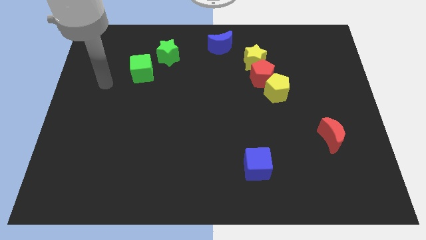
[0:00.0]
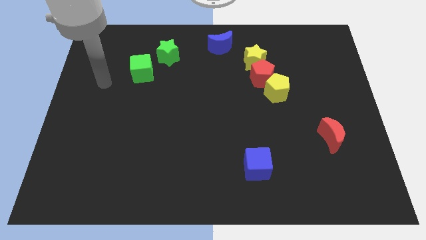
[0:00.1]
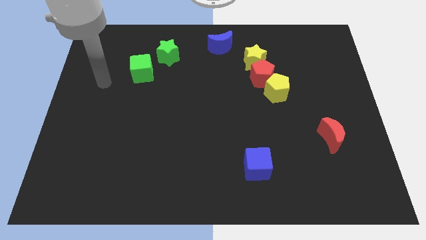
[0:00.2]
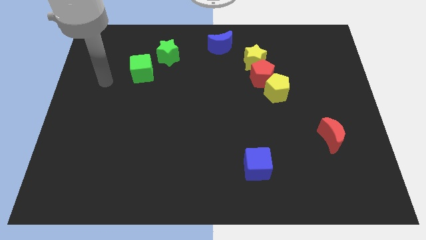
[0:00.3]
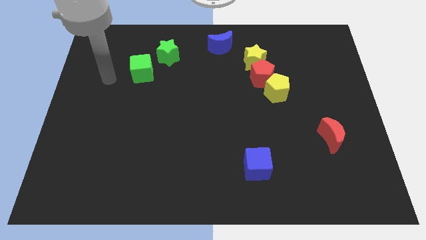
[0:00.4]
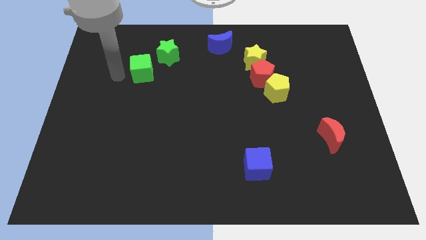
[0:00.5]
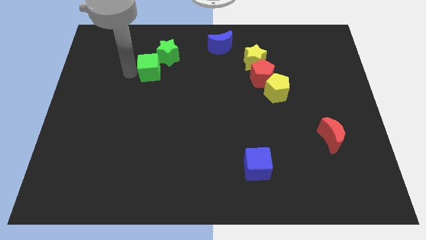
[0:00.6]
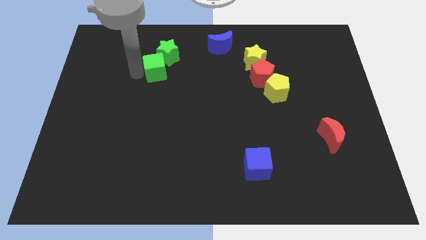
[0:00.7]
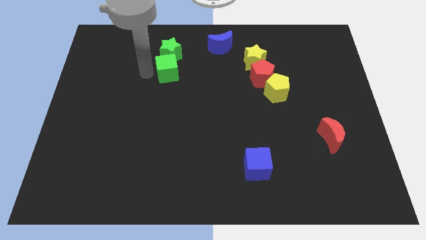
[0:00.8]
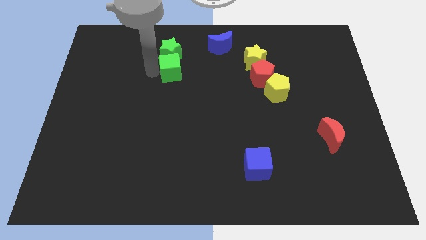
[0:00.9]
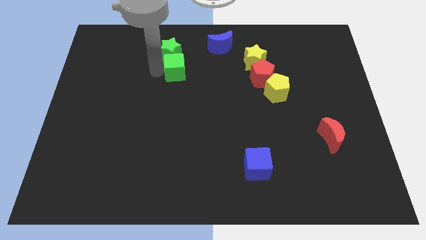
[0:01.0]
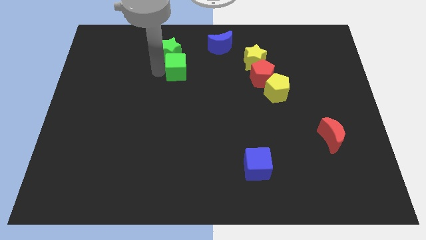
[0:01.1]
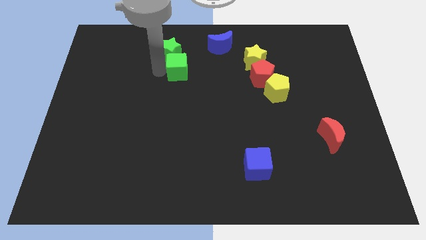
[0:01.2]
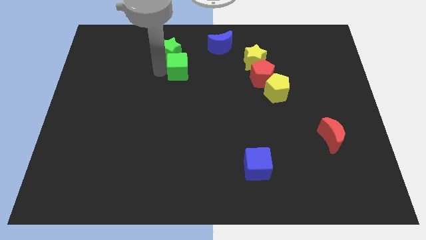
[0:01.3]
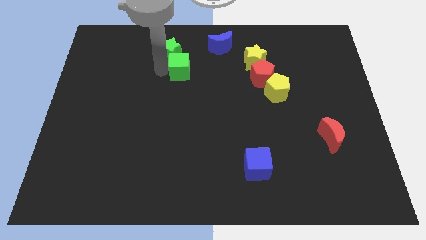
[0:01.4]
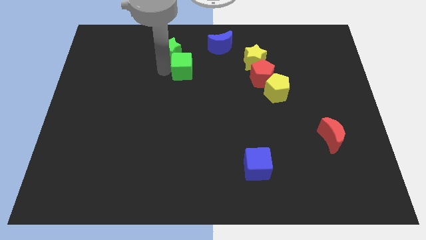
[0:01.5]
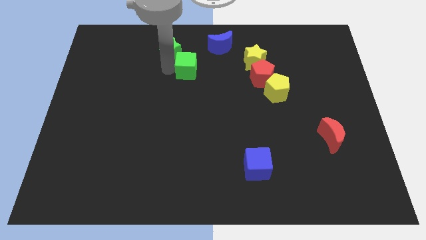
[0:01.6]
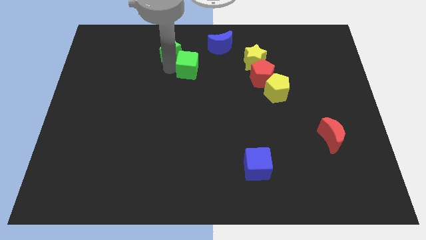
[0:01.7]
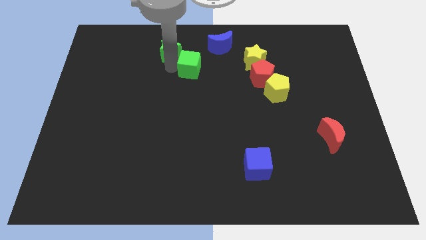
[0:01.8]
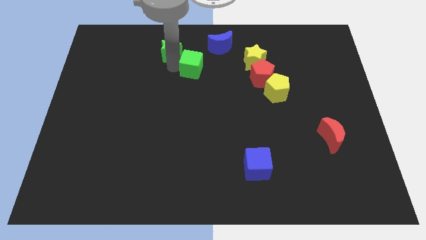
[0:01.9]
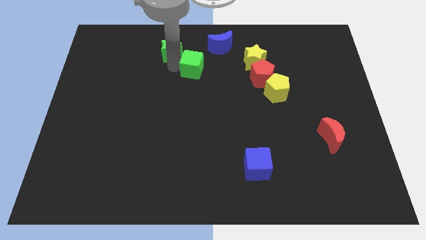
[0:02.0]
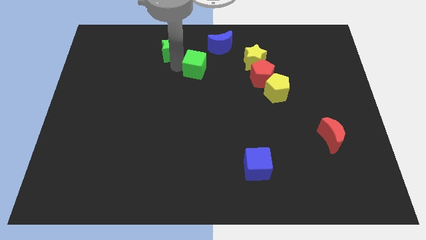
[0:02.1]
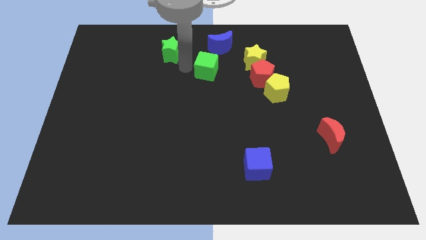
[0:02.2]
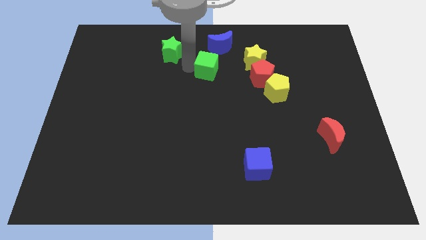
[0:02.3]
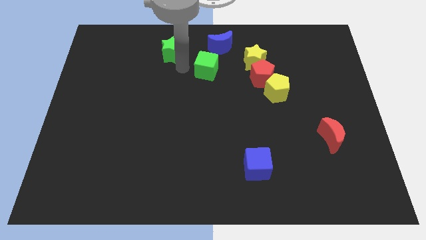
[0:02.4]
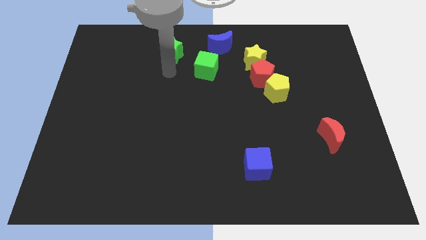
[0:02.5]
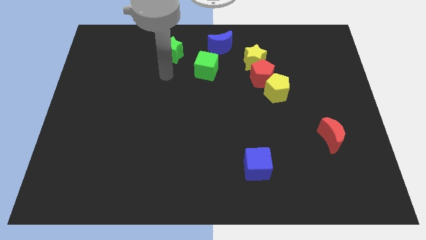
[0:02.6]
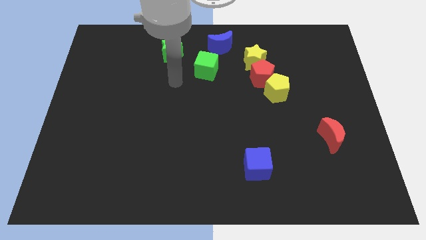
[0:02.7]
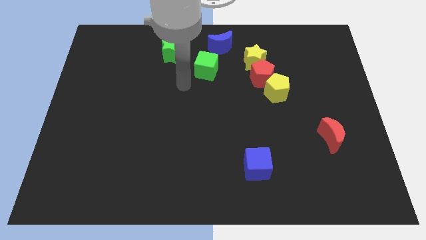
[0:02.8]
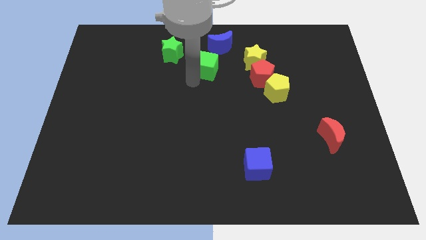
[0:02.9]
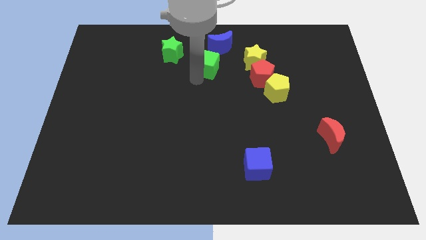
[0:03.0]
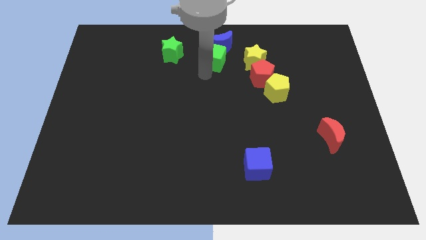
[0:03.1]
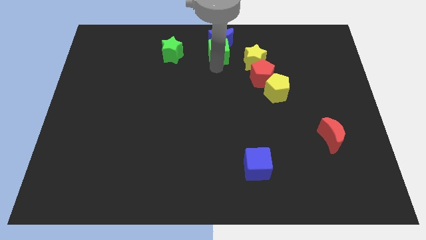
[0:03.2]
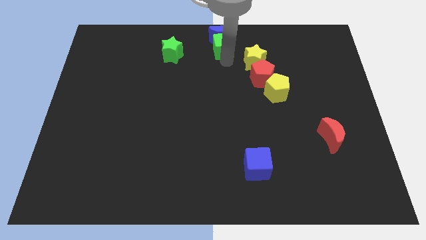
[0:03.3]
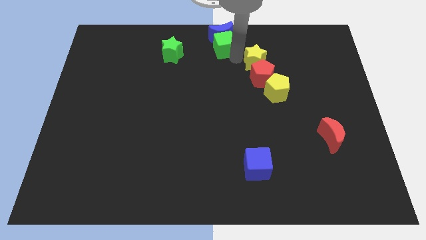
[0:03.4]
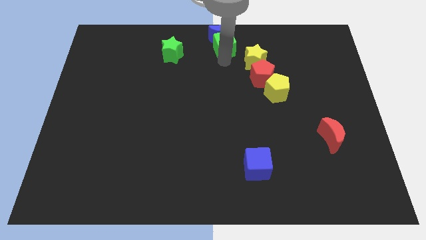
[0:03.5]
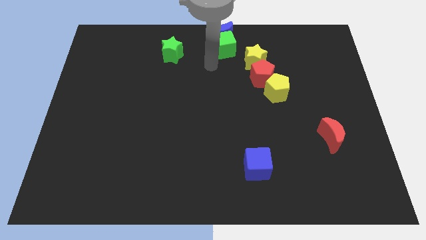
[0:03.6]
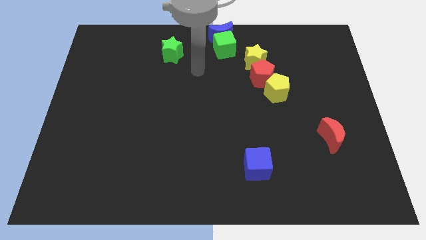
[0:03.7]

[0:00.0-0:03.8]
move the green cube into the blue crescent

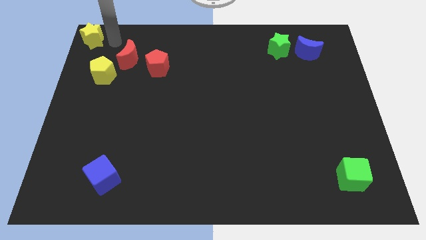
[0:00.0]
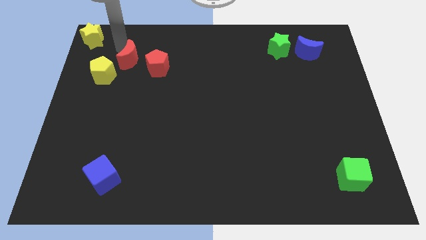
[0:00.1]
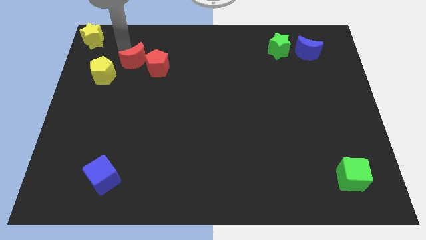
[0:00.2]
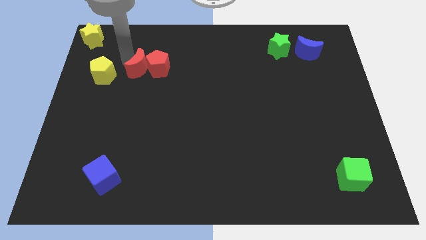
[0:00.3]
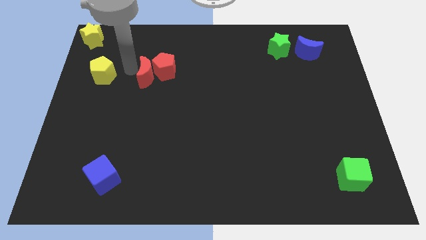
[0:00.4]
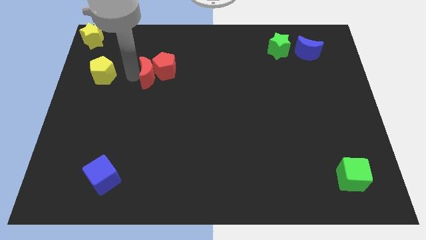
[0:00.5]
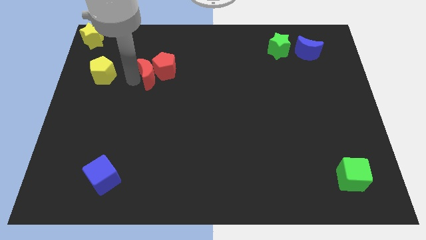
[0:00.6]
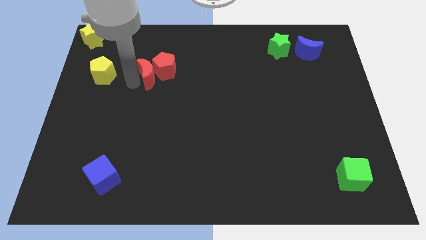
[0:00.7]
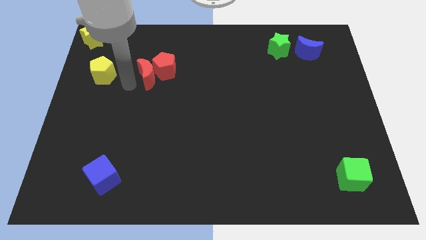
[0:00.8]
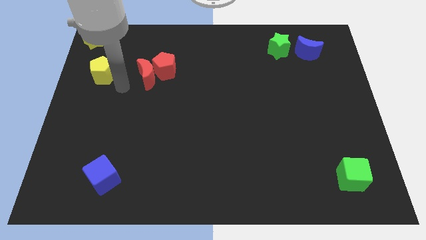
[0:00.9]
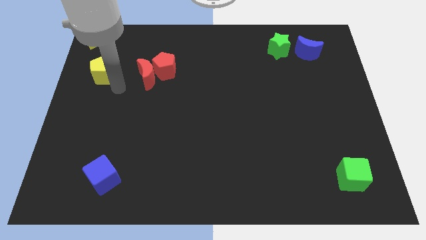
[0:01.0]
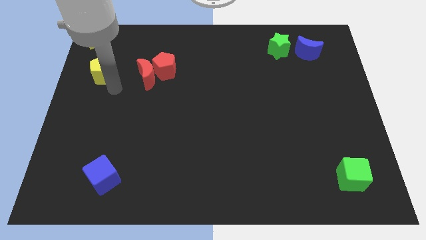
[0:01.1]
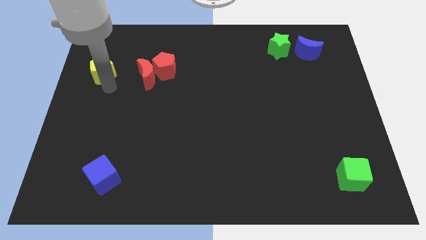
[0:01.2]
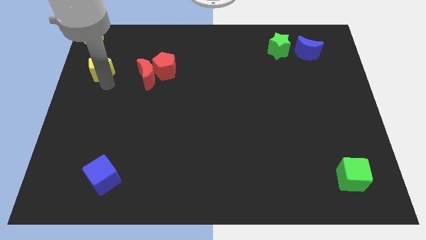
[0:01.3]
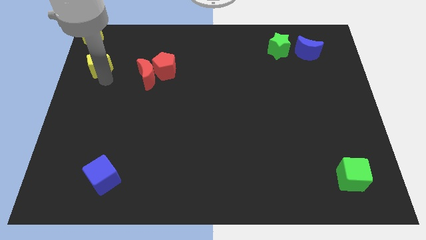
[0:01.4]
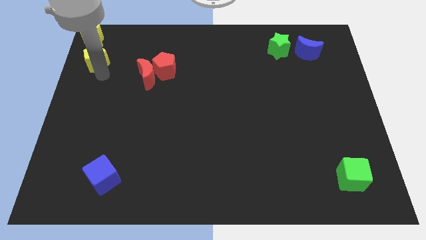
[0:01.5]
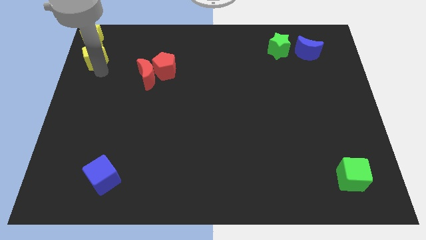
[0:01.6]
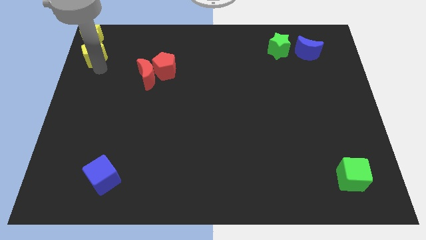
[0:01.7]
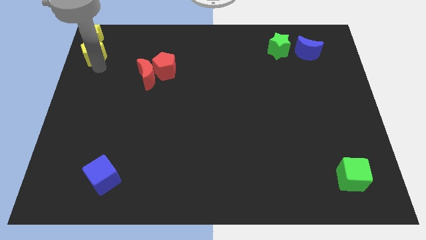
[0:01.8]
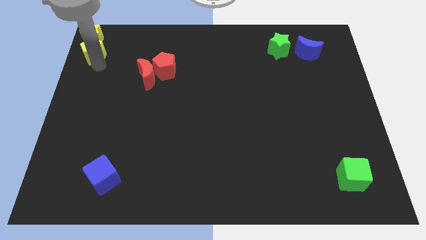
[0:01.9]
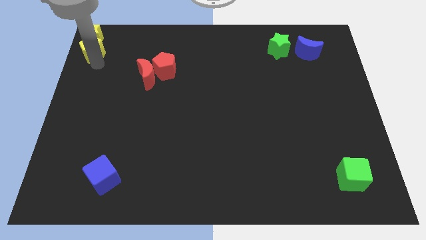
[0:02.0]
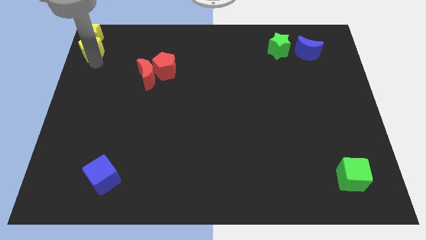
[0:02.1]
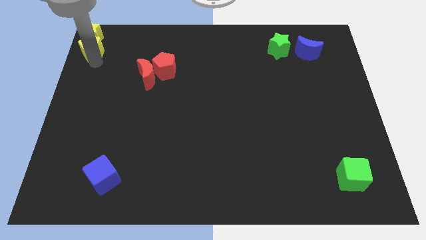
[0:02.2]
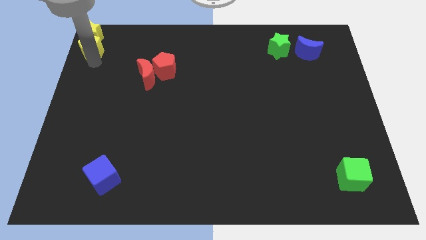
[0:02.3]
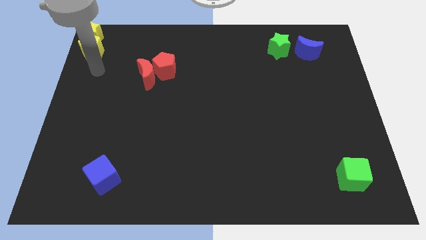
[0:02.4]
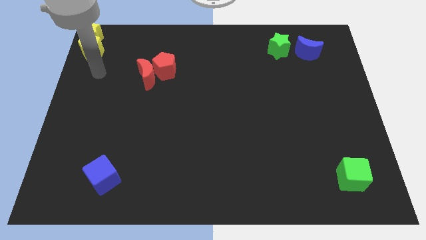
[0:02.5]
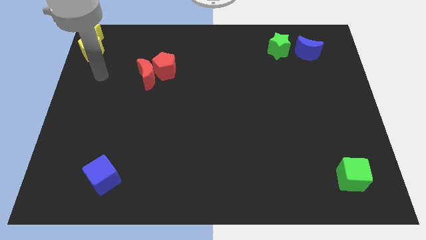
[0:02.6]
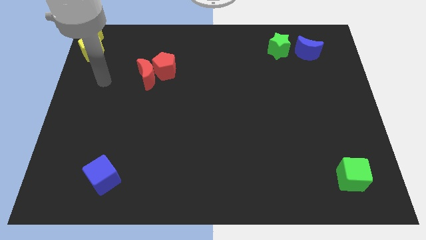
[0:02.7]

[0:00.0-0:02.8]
push the yellow pentagon bottom to the yellow star

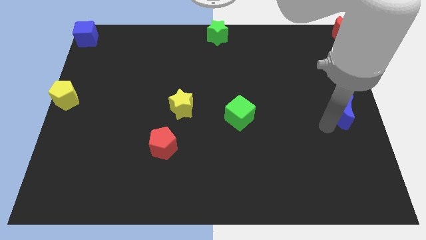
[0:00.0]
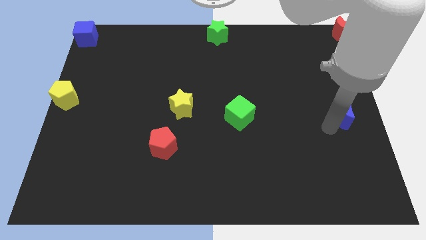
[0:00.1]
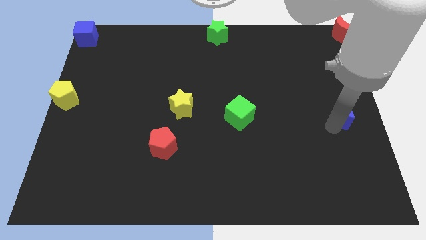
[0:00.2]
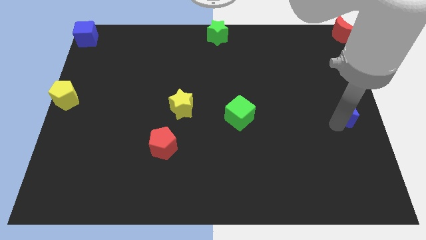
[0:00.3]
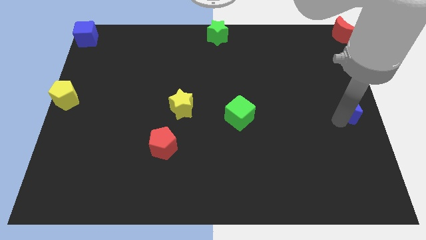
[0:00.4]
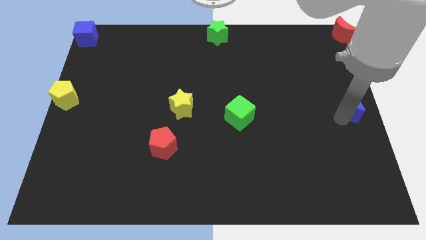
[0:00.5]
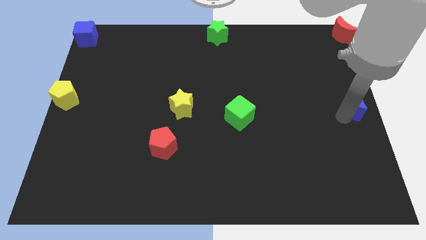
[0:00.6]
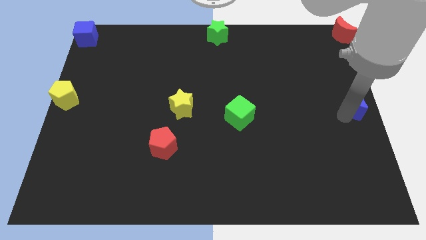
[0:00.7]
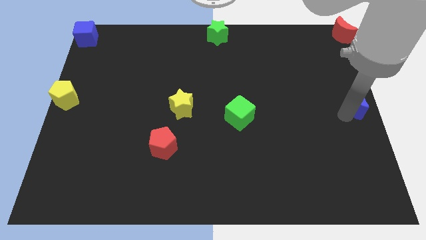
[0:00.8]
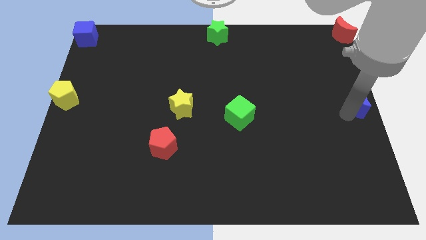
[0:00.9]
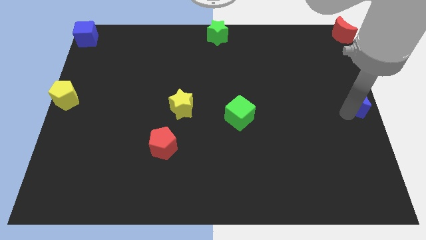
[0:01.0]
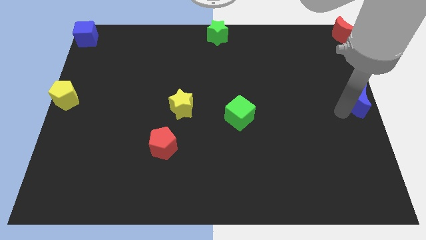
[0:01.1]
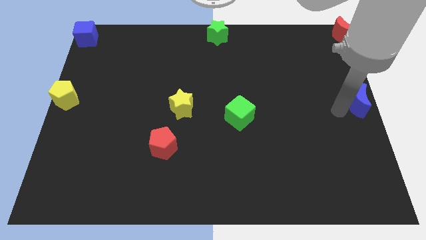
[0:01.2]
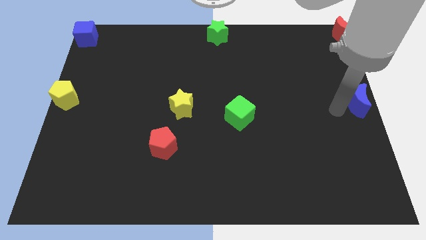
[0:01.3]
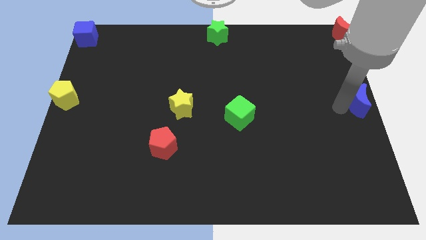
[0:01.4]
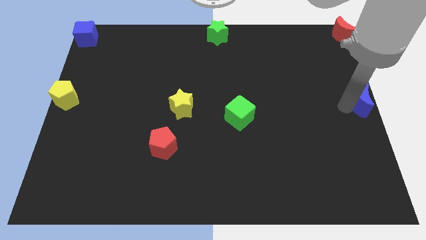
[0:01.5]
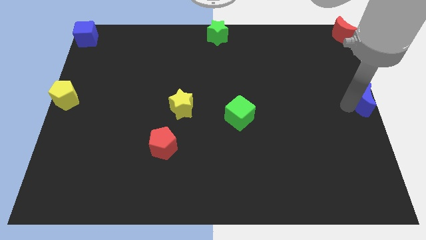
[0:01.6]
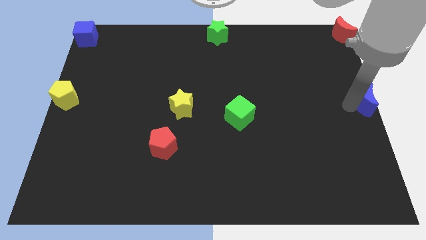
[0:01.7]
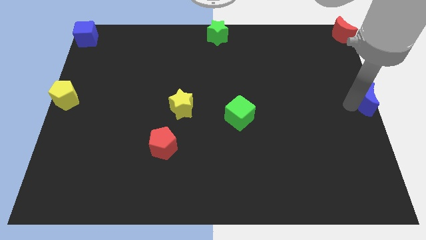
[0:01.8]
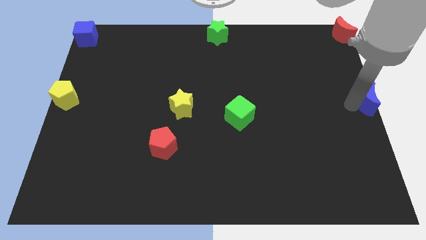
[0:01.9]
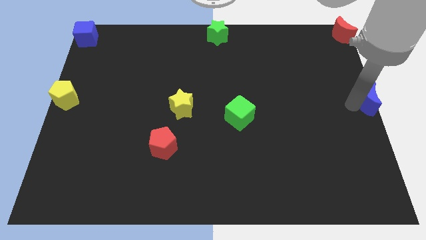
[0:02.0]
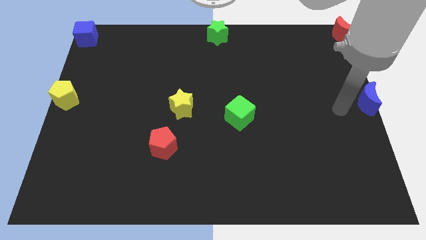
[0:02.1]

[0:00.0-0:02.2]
push the blue crescent to the right center of the board

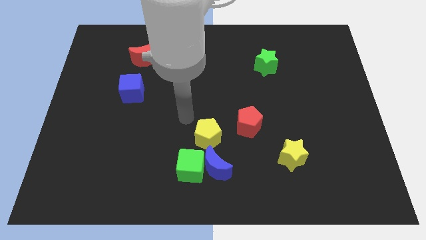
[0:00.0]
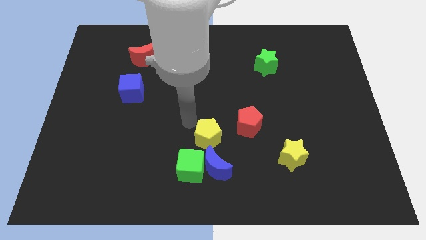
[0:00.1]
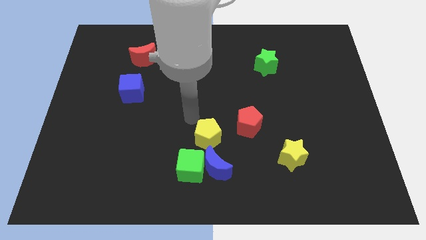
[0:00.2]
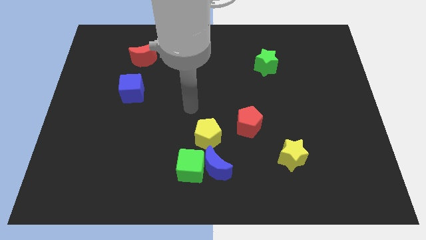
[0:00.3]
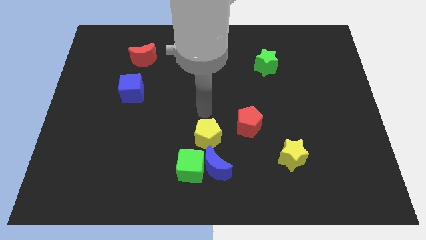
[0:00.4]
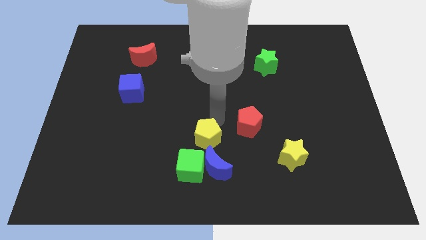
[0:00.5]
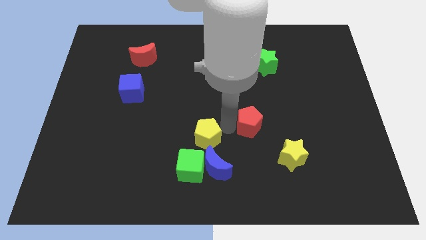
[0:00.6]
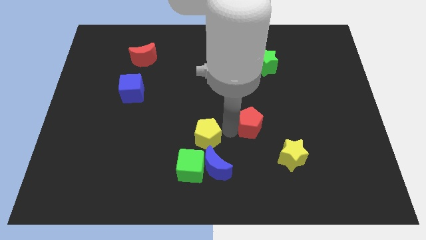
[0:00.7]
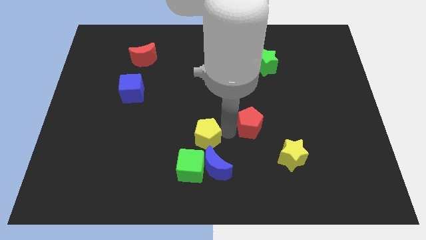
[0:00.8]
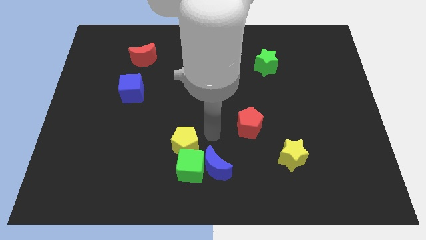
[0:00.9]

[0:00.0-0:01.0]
move yellow pentagon on the top of green cube
